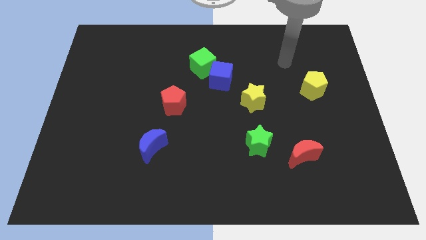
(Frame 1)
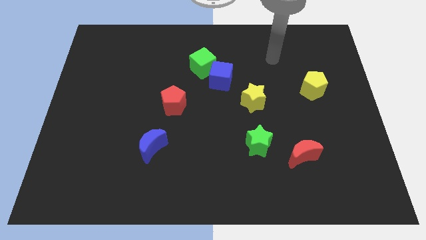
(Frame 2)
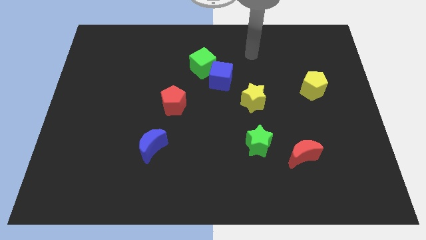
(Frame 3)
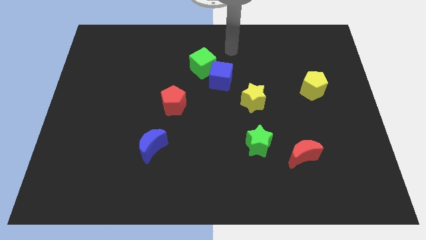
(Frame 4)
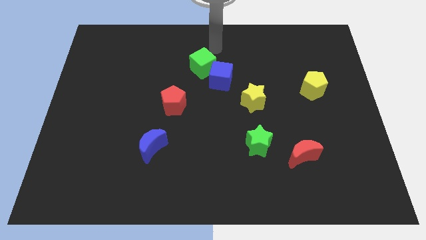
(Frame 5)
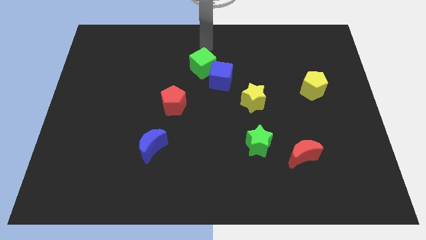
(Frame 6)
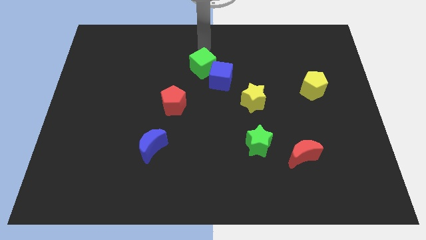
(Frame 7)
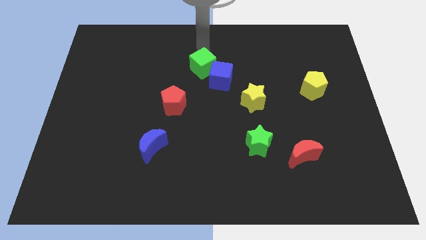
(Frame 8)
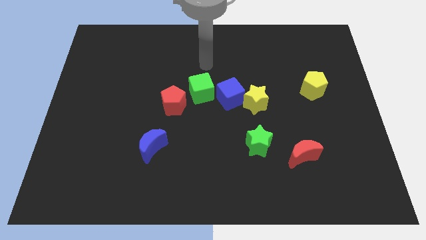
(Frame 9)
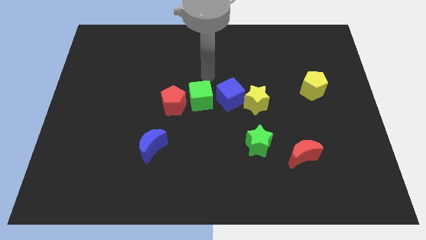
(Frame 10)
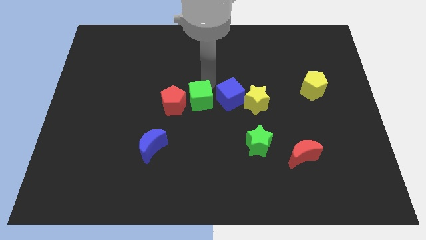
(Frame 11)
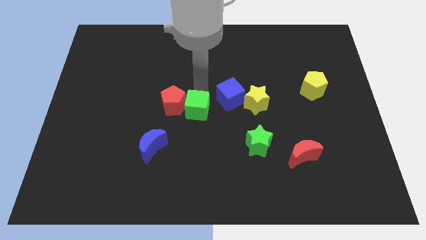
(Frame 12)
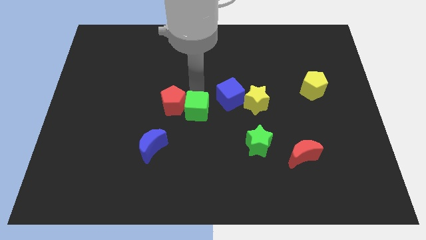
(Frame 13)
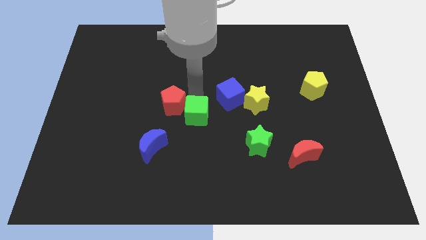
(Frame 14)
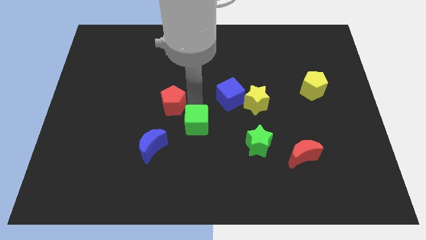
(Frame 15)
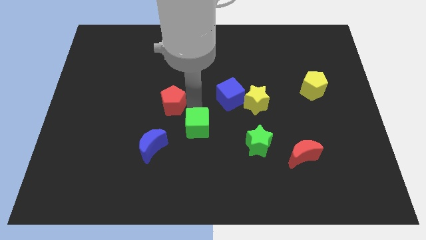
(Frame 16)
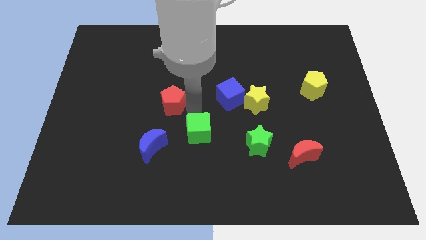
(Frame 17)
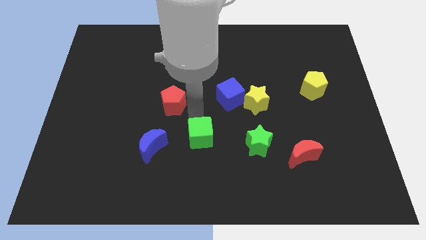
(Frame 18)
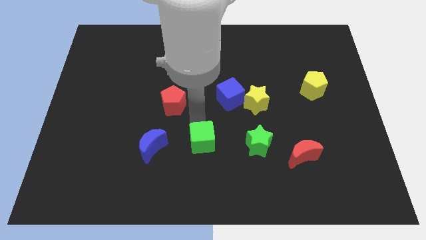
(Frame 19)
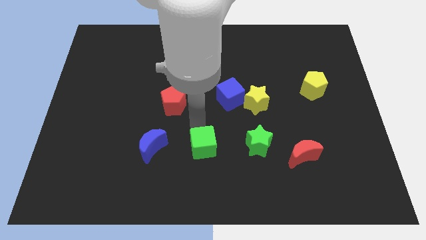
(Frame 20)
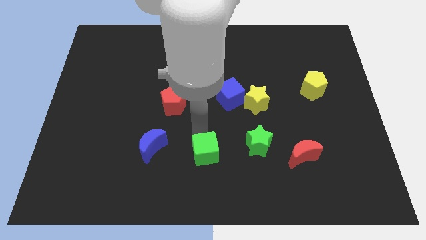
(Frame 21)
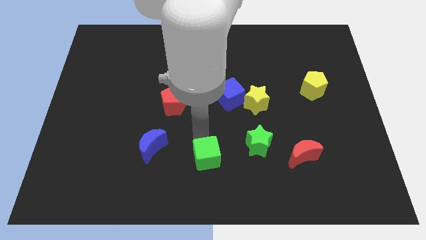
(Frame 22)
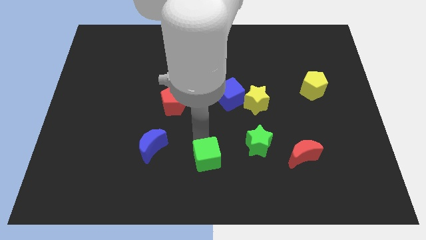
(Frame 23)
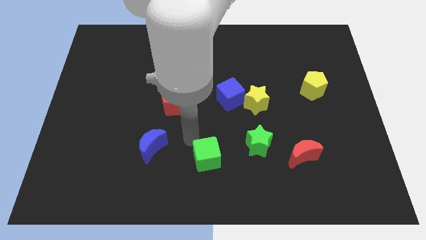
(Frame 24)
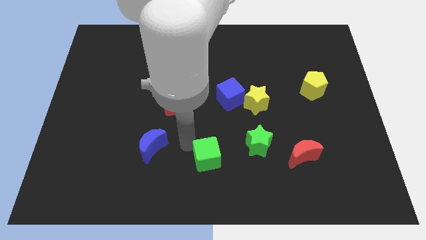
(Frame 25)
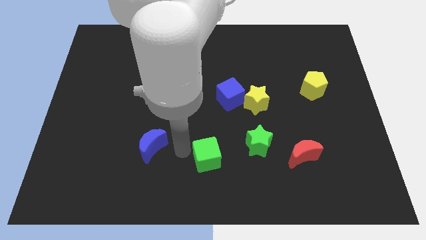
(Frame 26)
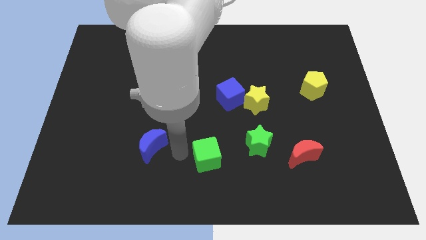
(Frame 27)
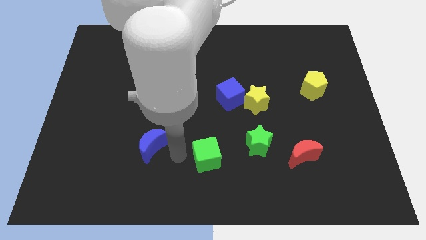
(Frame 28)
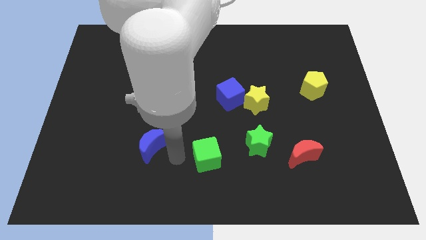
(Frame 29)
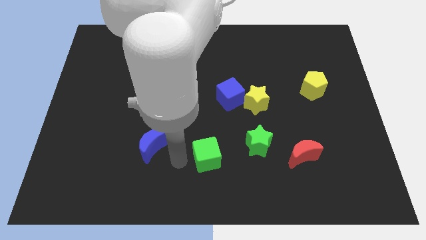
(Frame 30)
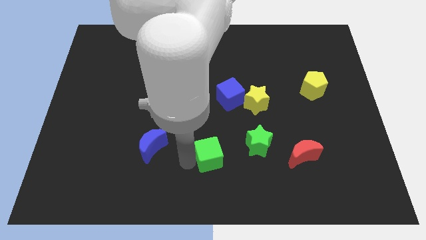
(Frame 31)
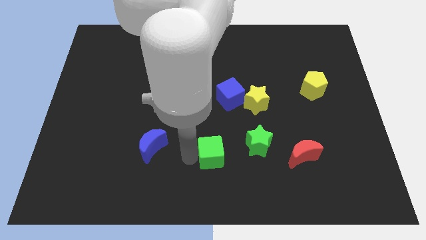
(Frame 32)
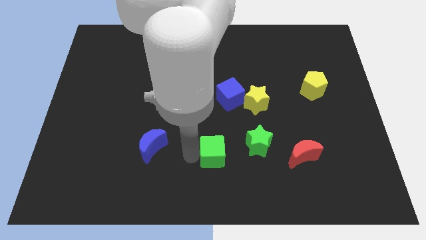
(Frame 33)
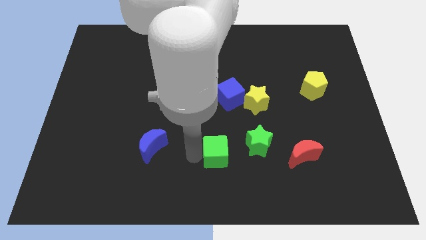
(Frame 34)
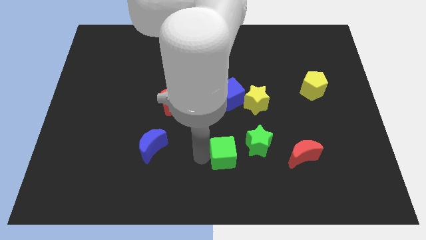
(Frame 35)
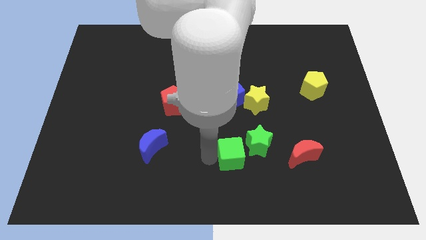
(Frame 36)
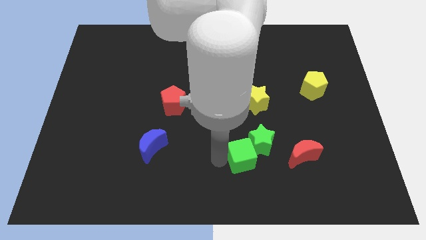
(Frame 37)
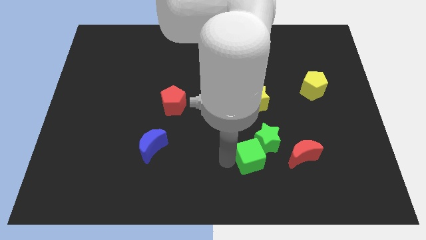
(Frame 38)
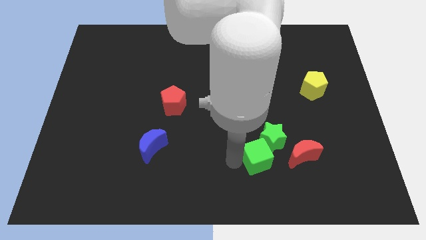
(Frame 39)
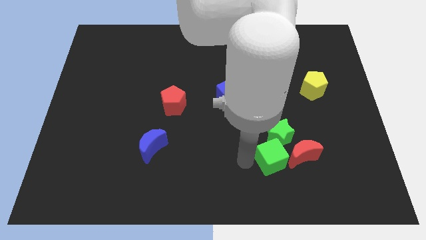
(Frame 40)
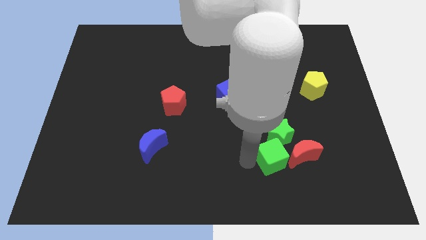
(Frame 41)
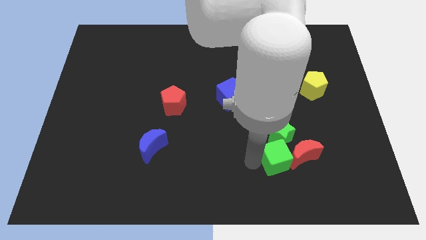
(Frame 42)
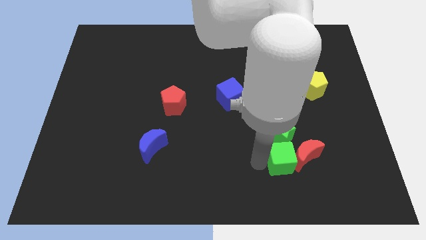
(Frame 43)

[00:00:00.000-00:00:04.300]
push the green cube close to the red moon

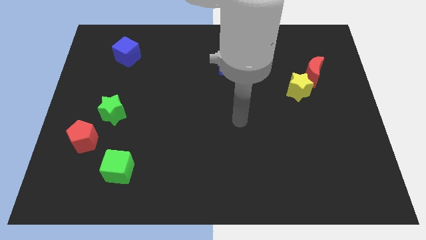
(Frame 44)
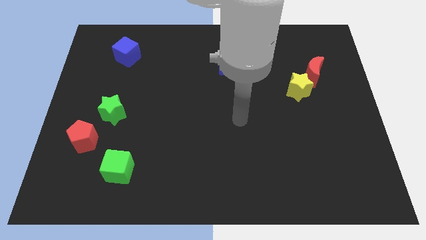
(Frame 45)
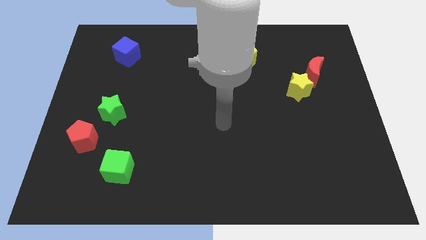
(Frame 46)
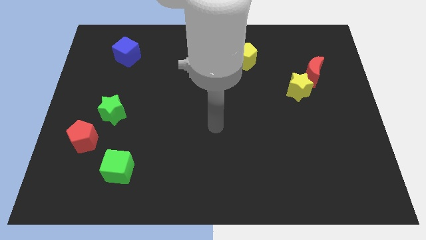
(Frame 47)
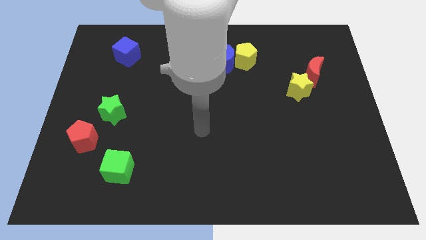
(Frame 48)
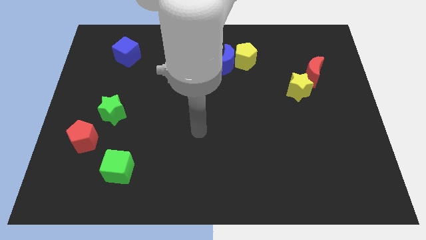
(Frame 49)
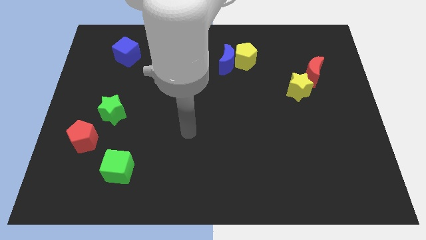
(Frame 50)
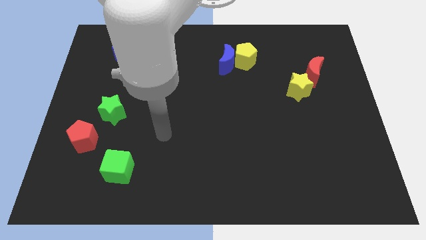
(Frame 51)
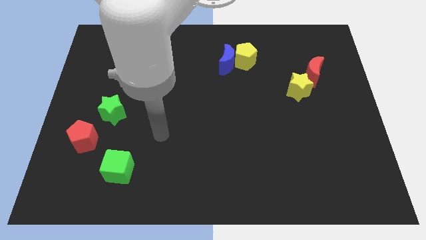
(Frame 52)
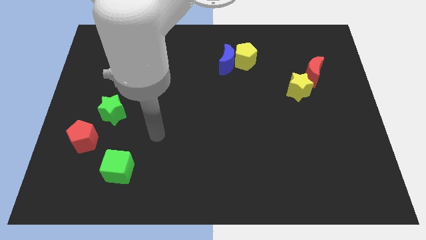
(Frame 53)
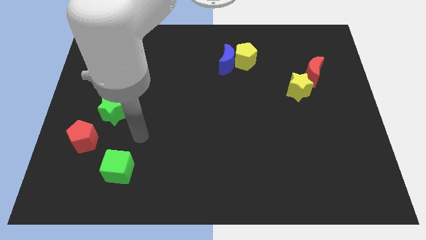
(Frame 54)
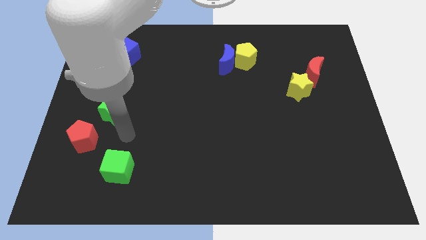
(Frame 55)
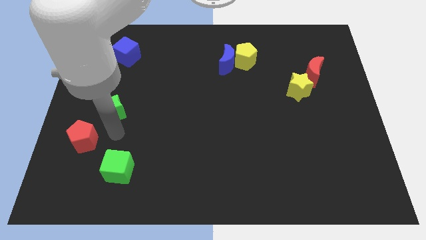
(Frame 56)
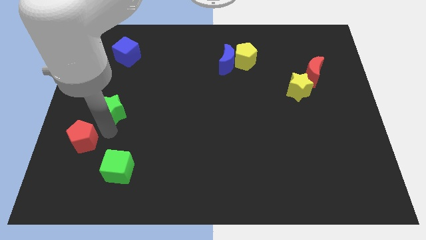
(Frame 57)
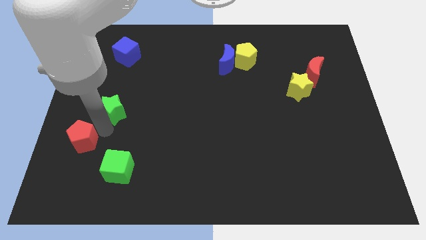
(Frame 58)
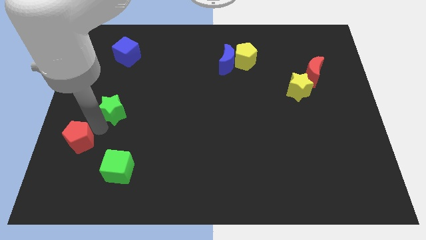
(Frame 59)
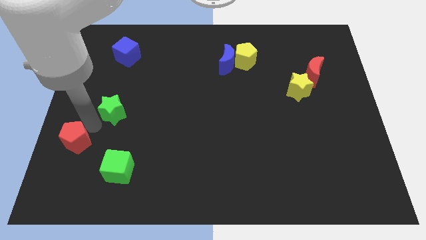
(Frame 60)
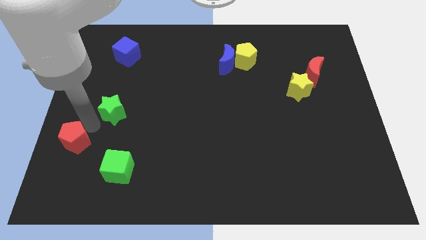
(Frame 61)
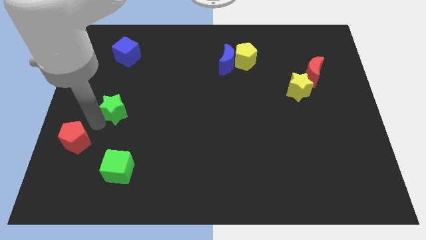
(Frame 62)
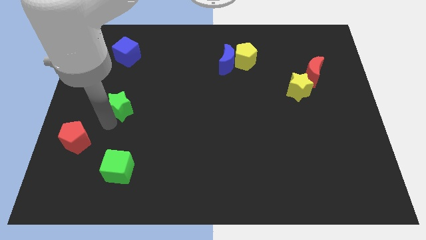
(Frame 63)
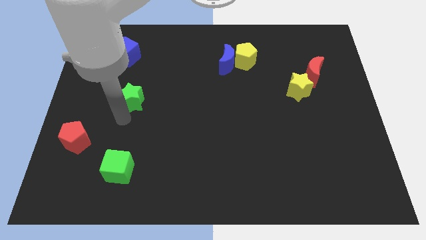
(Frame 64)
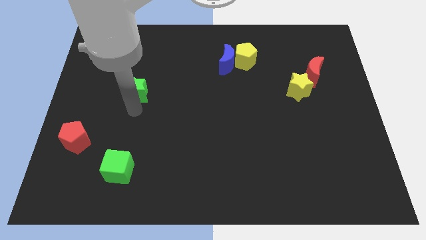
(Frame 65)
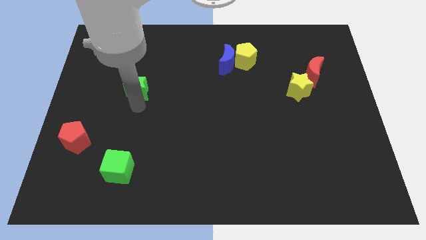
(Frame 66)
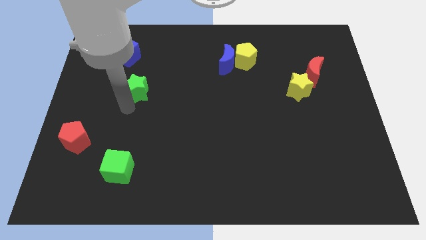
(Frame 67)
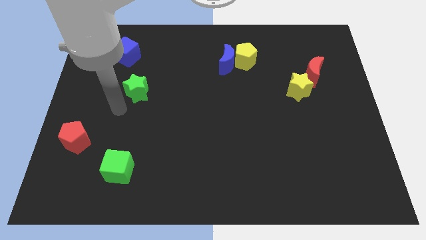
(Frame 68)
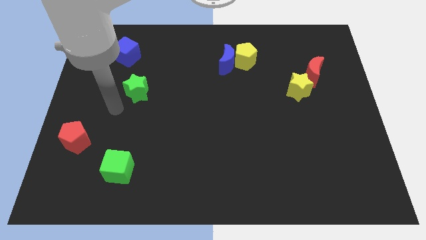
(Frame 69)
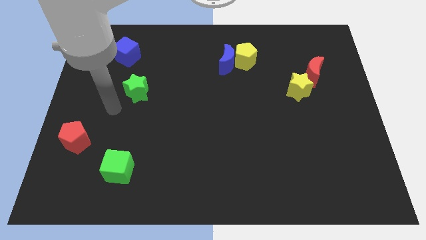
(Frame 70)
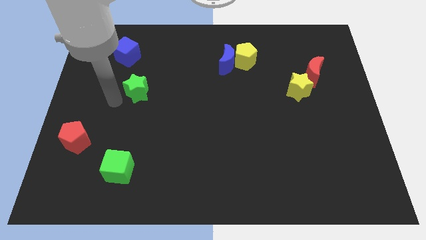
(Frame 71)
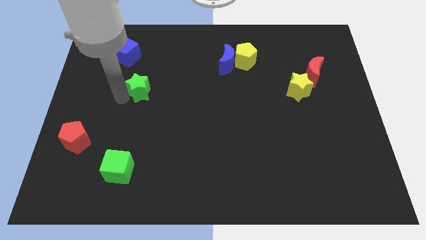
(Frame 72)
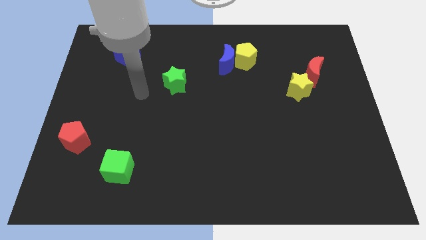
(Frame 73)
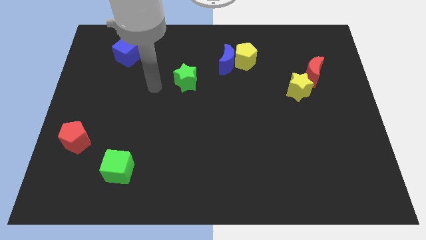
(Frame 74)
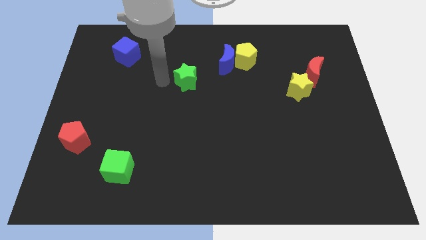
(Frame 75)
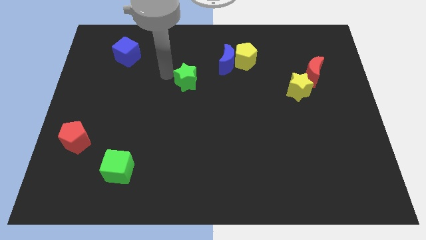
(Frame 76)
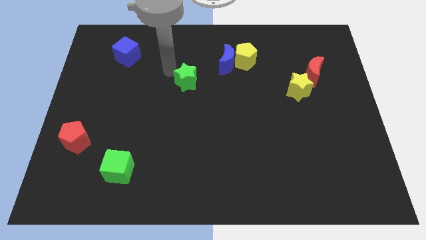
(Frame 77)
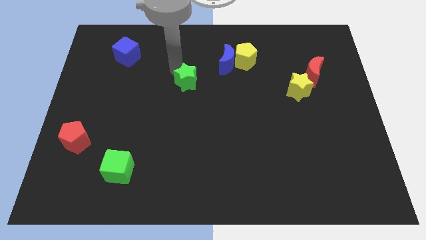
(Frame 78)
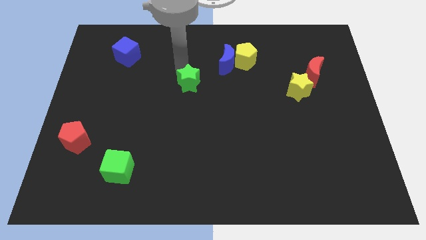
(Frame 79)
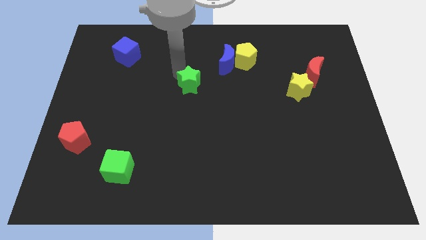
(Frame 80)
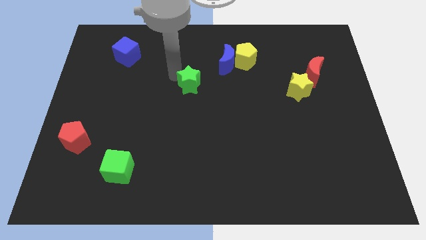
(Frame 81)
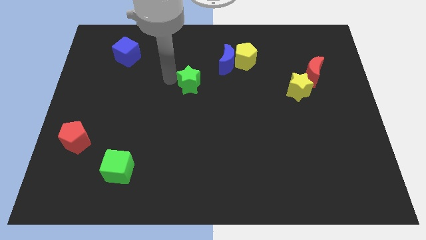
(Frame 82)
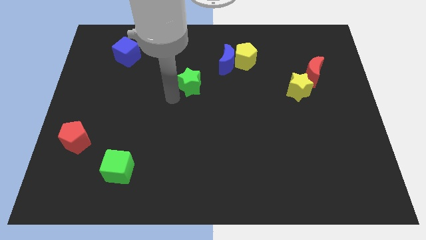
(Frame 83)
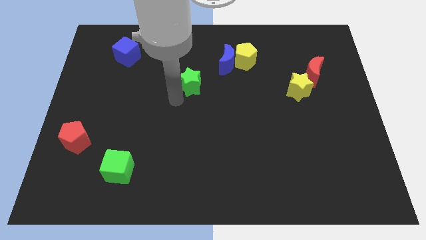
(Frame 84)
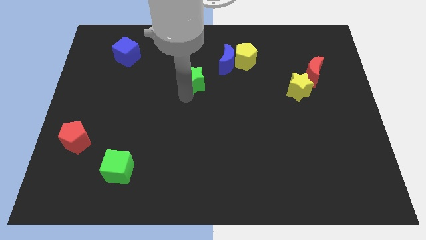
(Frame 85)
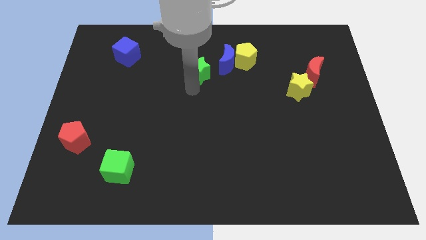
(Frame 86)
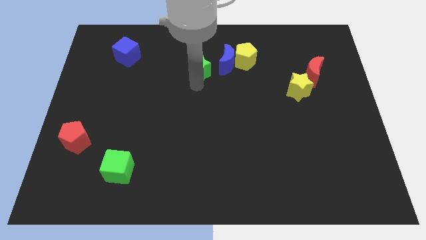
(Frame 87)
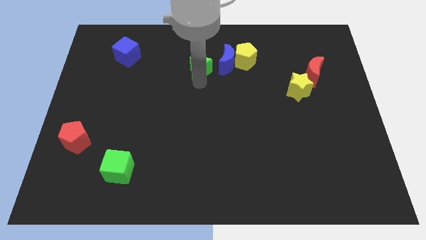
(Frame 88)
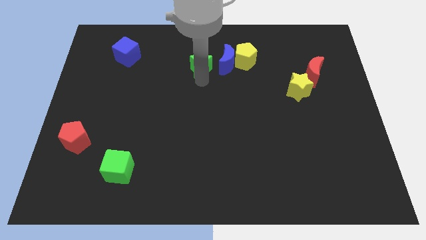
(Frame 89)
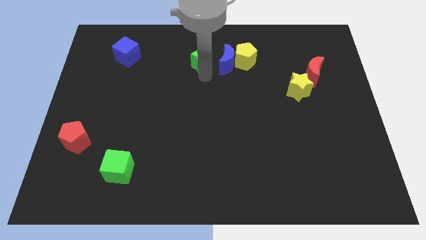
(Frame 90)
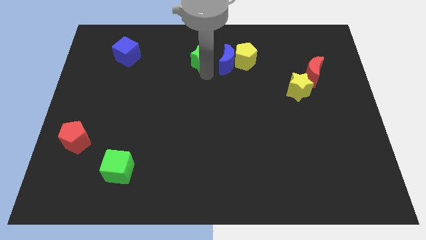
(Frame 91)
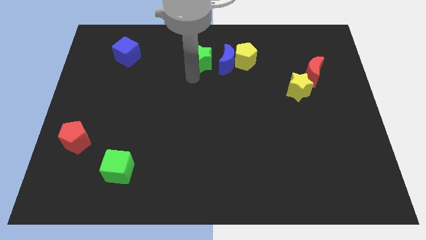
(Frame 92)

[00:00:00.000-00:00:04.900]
slide the green star close to the blue moon
